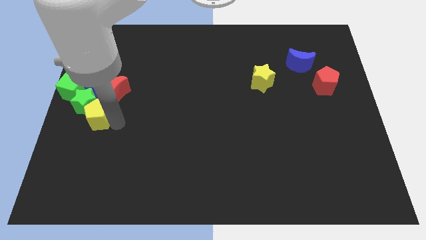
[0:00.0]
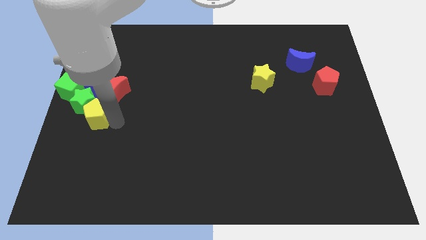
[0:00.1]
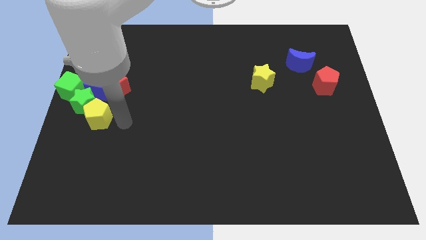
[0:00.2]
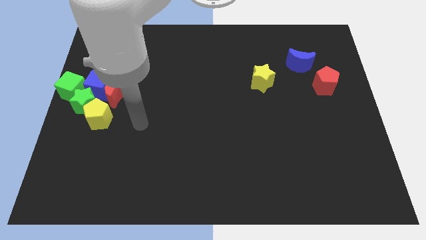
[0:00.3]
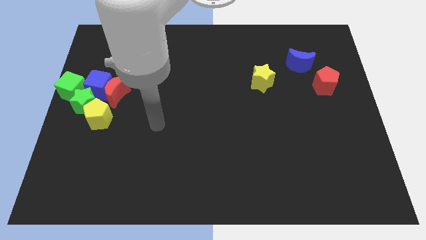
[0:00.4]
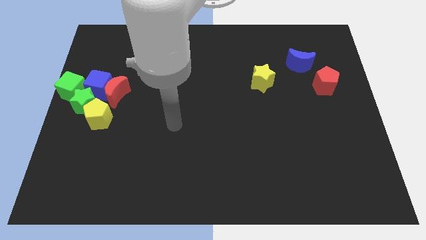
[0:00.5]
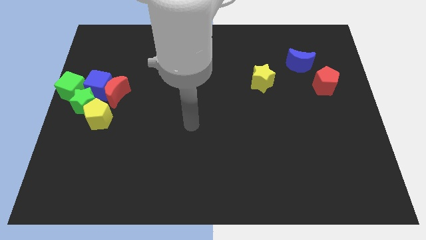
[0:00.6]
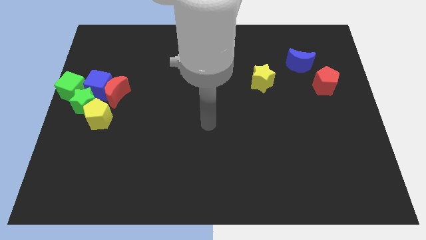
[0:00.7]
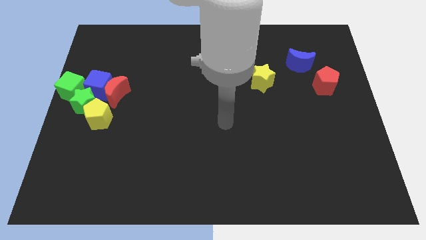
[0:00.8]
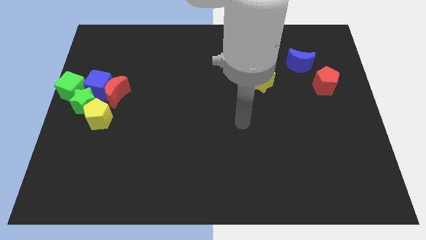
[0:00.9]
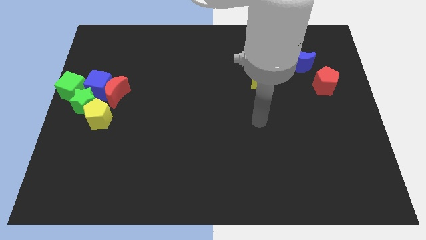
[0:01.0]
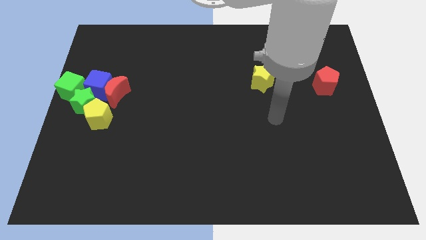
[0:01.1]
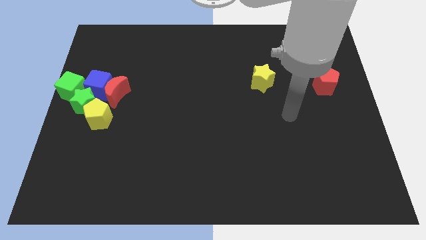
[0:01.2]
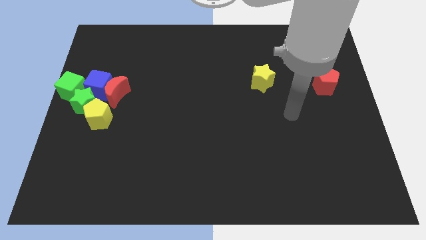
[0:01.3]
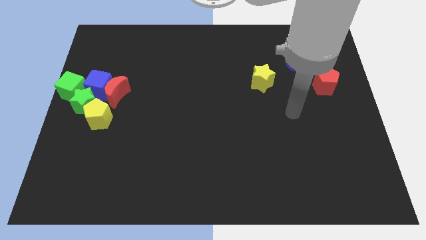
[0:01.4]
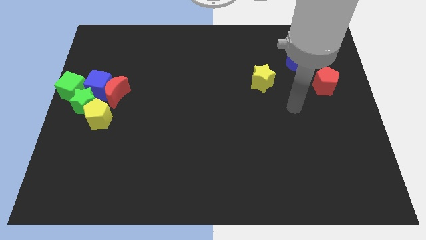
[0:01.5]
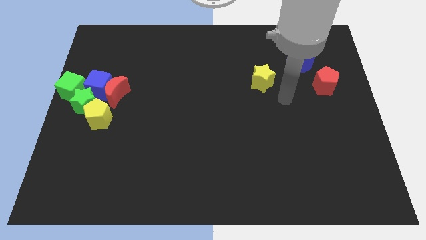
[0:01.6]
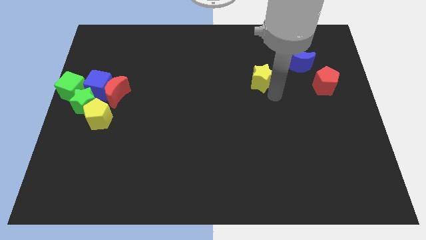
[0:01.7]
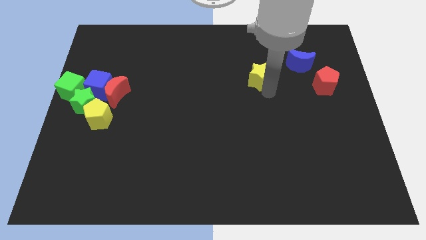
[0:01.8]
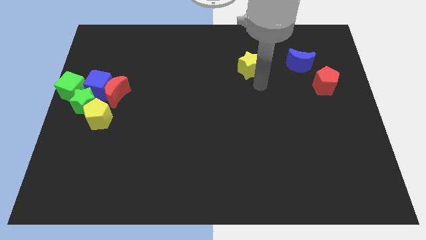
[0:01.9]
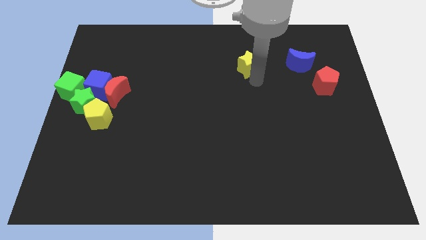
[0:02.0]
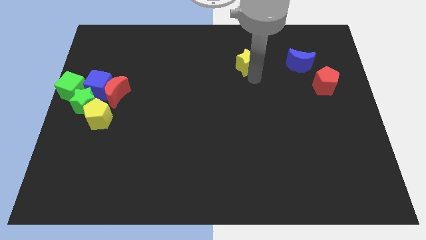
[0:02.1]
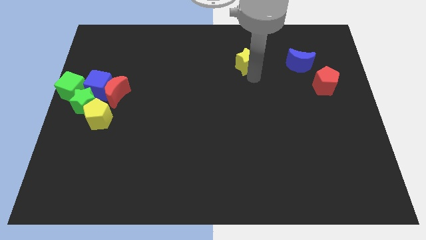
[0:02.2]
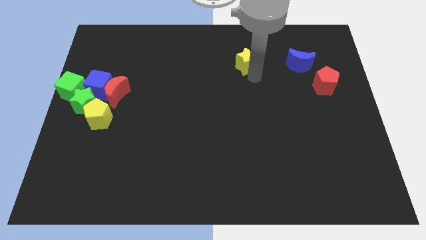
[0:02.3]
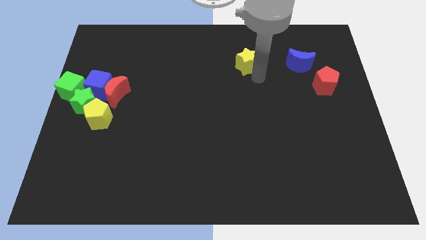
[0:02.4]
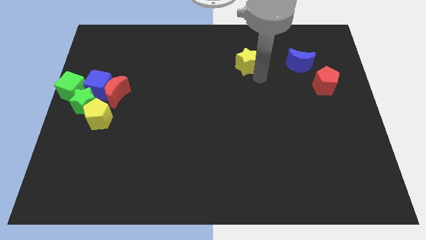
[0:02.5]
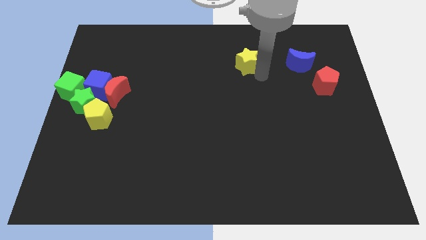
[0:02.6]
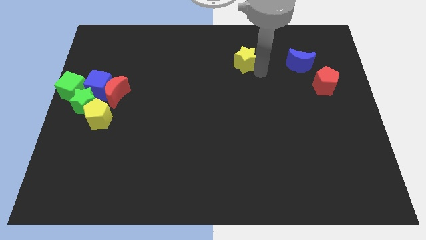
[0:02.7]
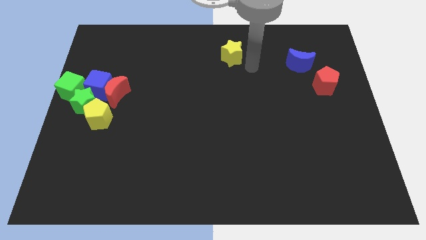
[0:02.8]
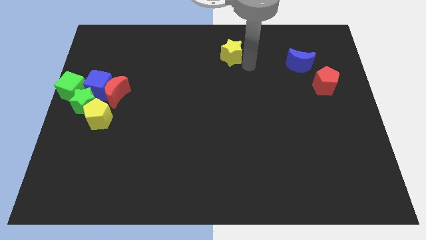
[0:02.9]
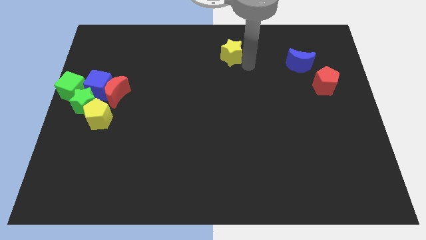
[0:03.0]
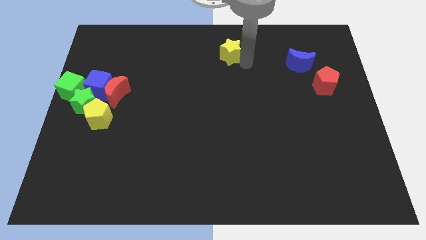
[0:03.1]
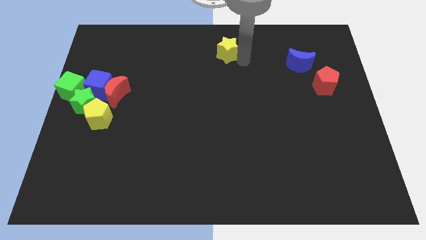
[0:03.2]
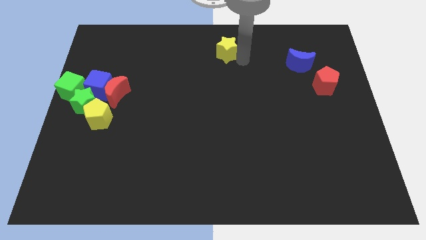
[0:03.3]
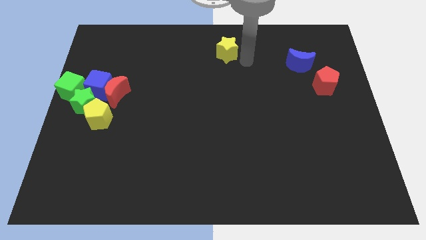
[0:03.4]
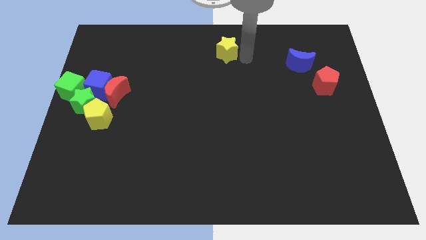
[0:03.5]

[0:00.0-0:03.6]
move the yellow star to the top center of the board

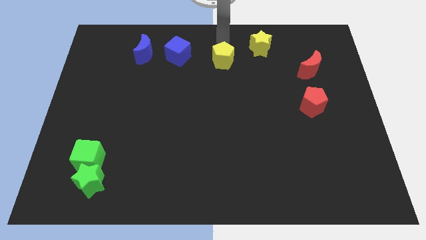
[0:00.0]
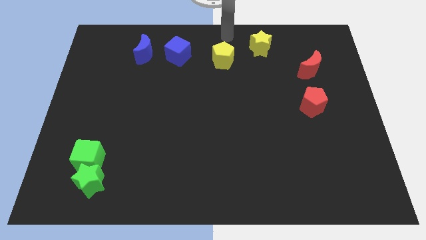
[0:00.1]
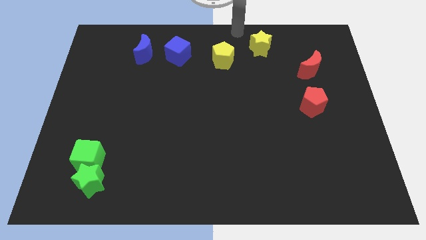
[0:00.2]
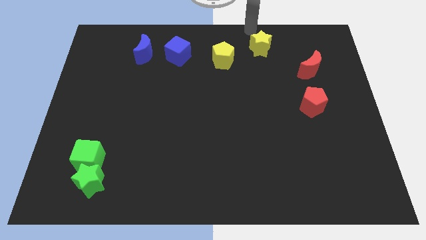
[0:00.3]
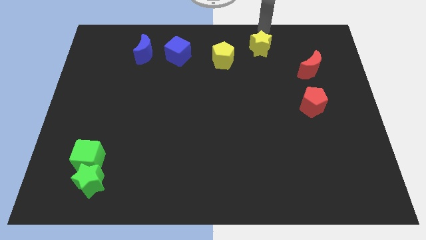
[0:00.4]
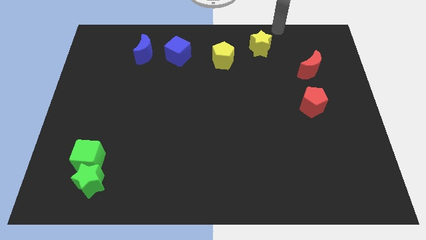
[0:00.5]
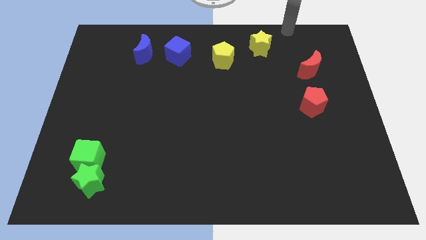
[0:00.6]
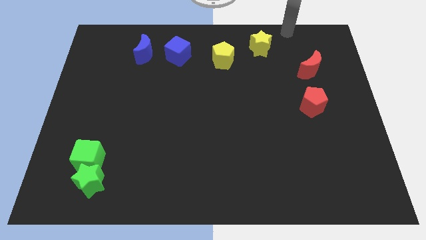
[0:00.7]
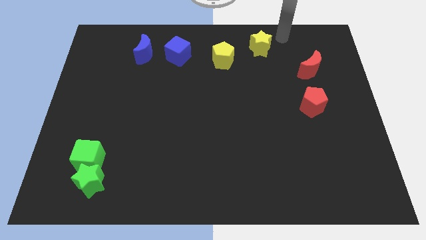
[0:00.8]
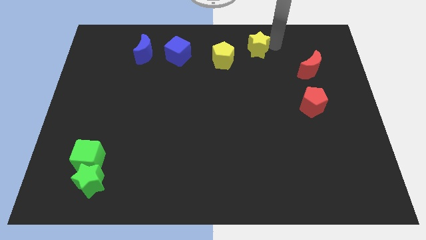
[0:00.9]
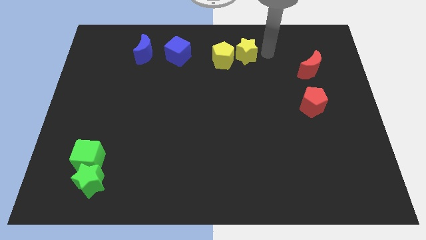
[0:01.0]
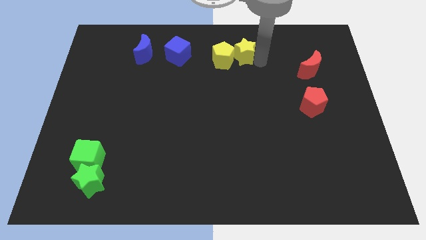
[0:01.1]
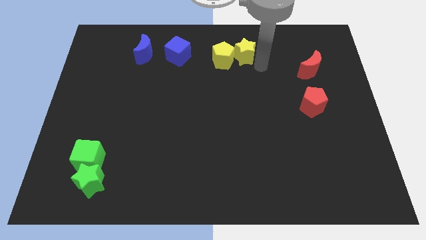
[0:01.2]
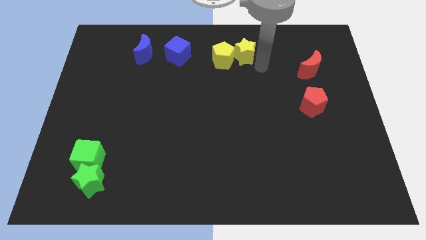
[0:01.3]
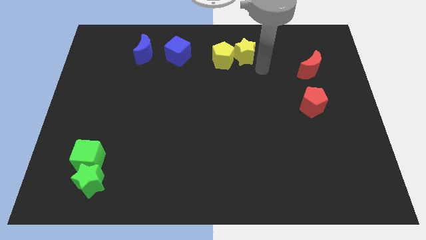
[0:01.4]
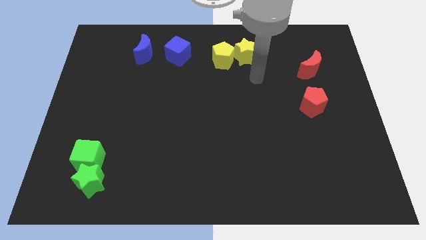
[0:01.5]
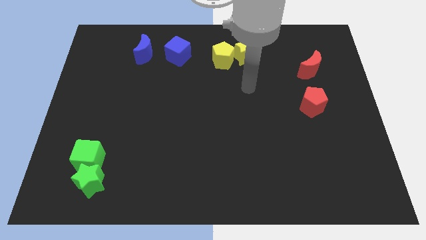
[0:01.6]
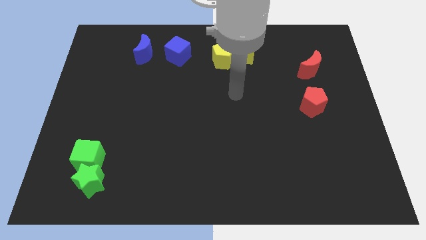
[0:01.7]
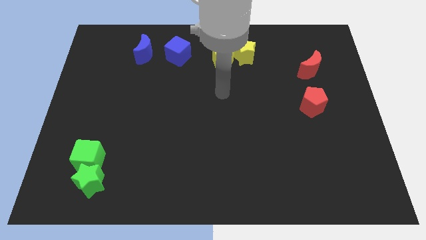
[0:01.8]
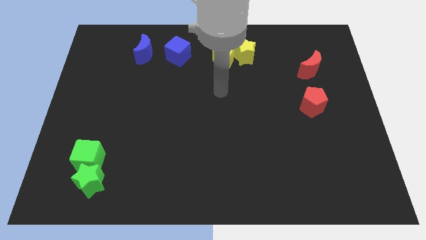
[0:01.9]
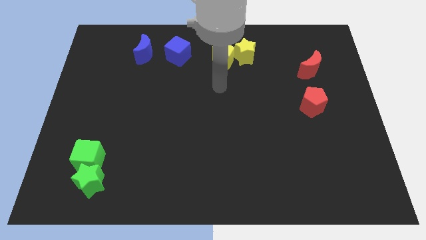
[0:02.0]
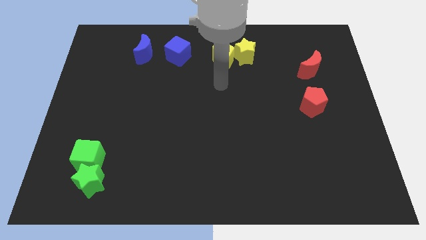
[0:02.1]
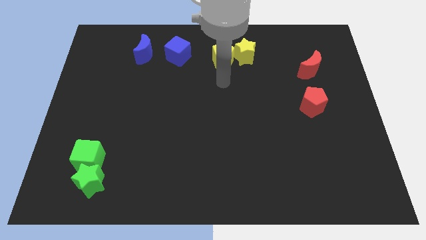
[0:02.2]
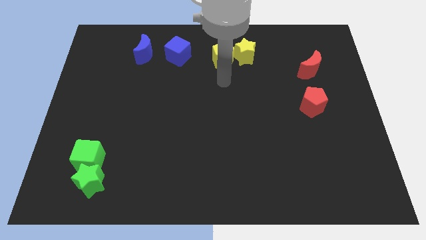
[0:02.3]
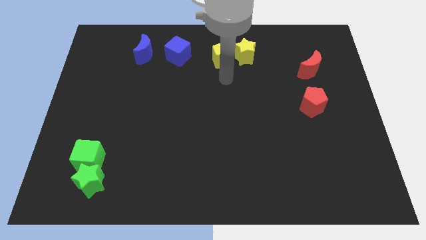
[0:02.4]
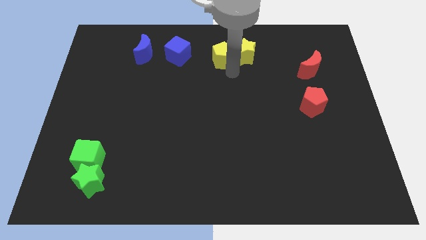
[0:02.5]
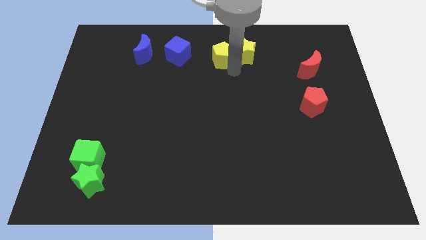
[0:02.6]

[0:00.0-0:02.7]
push the yellow star into the yellow pentagon

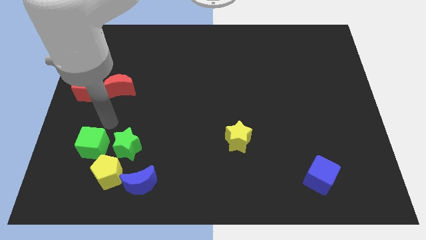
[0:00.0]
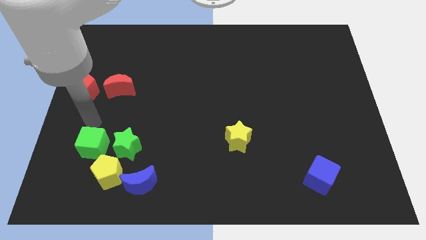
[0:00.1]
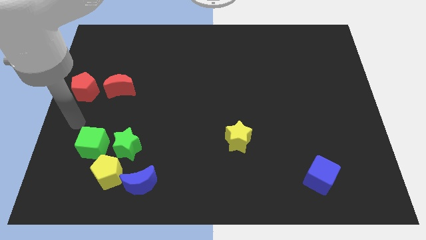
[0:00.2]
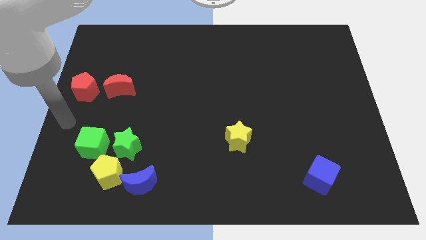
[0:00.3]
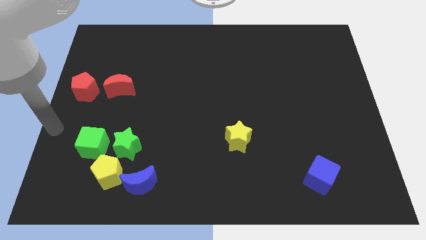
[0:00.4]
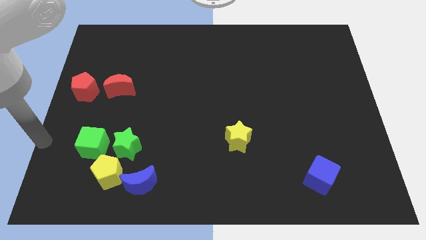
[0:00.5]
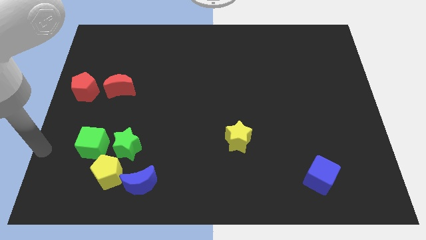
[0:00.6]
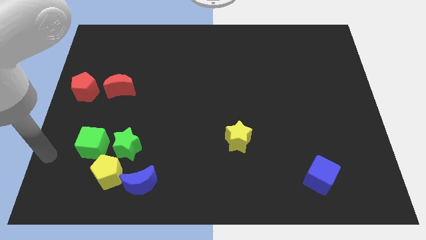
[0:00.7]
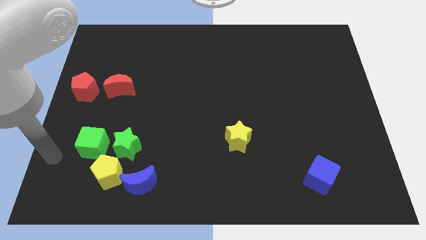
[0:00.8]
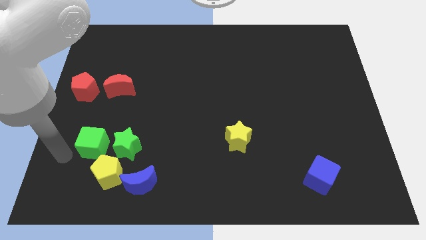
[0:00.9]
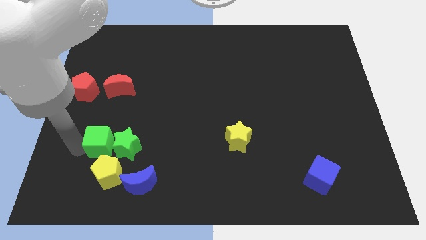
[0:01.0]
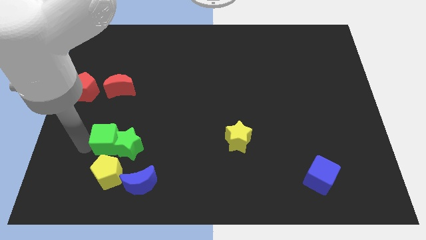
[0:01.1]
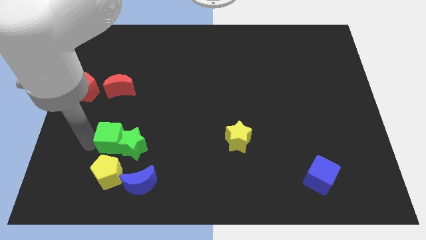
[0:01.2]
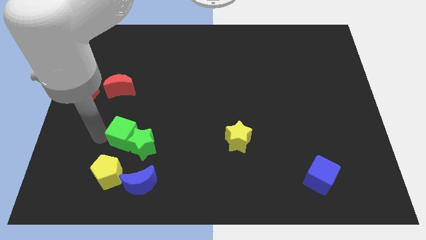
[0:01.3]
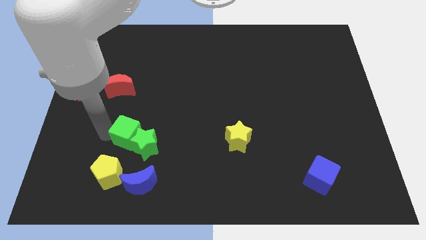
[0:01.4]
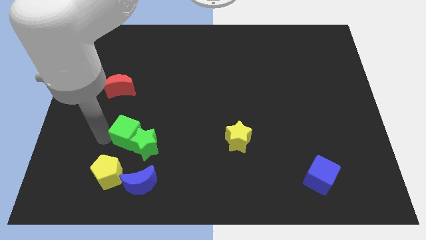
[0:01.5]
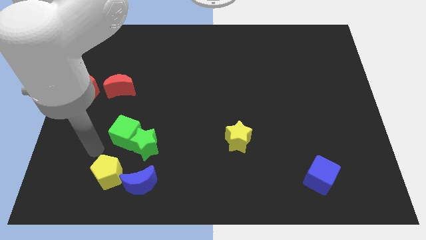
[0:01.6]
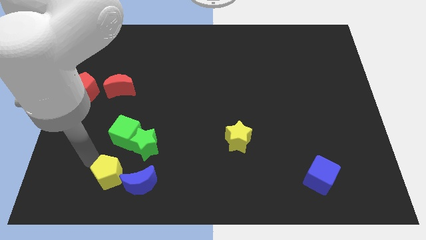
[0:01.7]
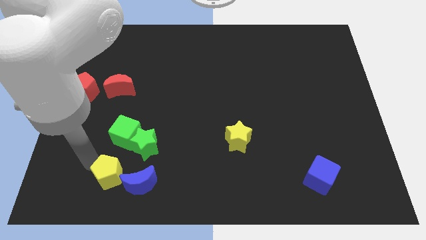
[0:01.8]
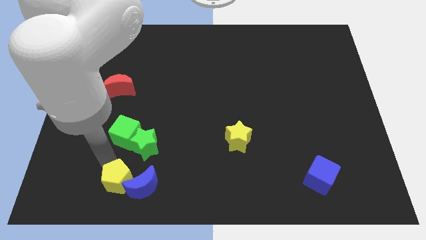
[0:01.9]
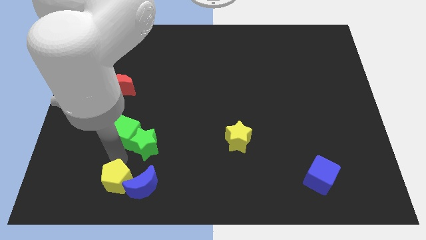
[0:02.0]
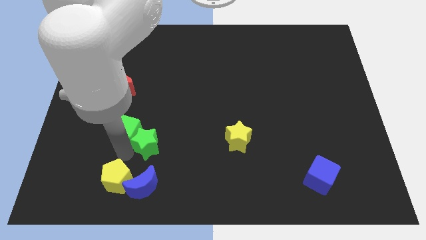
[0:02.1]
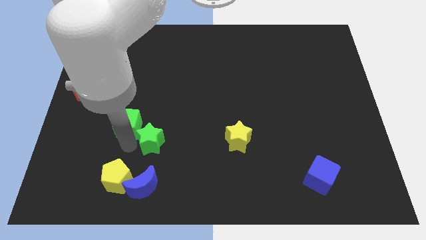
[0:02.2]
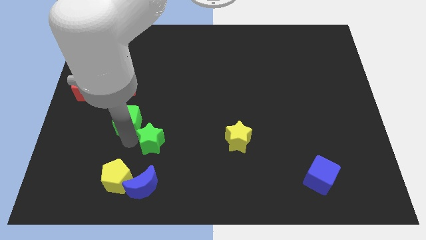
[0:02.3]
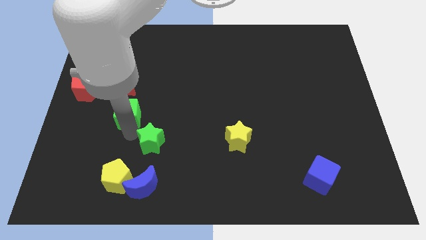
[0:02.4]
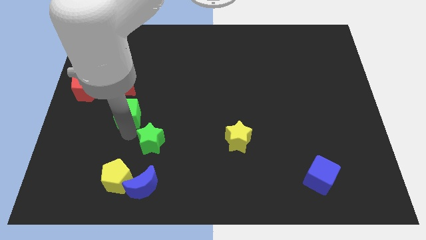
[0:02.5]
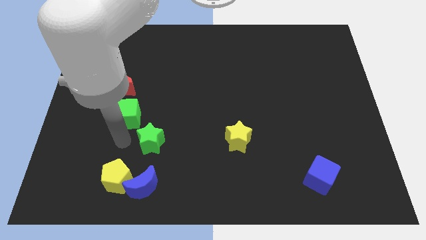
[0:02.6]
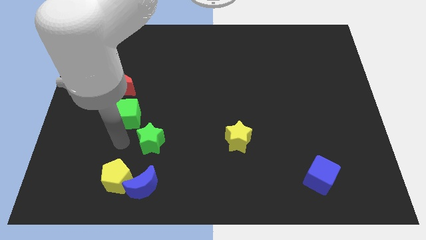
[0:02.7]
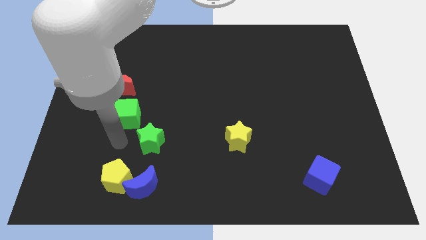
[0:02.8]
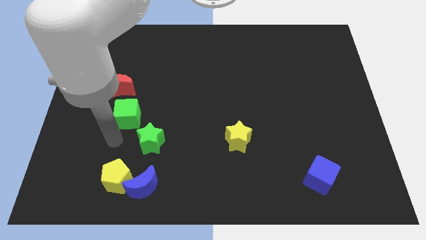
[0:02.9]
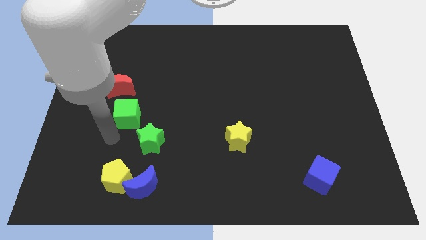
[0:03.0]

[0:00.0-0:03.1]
move the green cube and yellow pentagon vertical to each other
